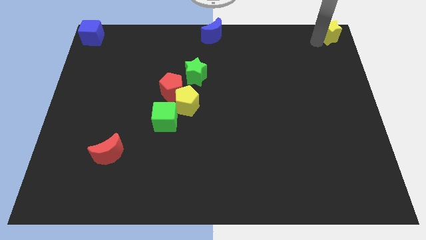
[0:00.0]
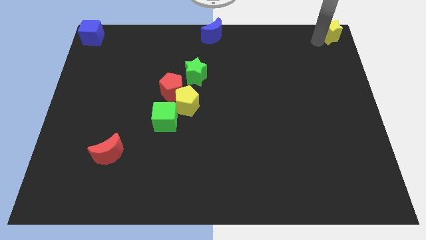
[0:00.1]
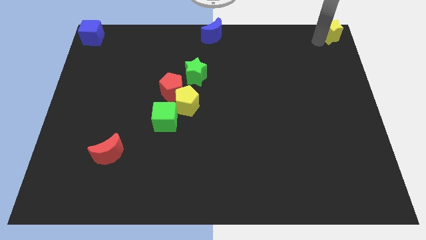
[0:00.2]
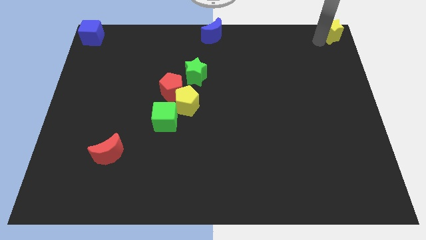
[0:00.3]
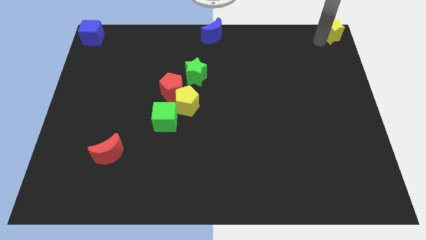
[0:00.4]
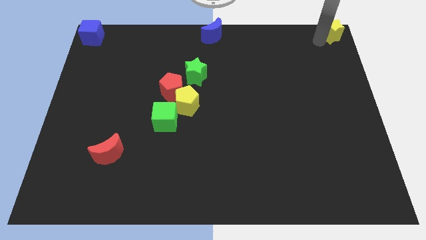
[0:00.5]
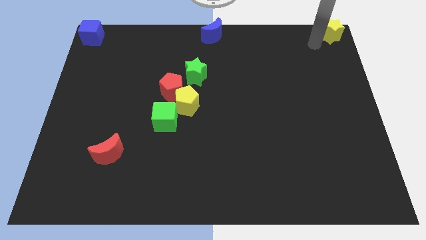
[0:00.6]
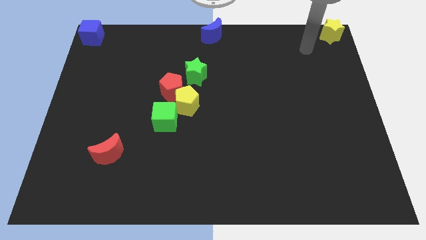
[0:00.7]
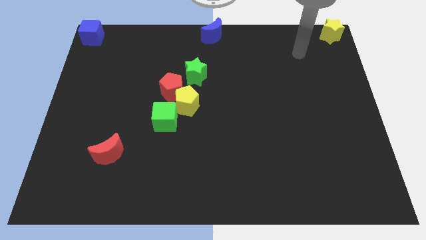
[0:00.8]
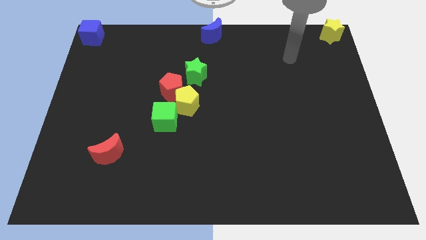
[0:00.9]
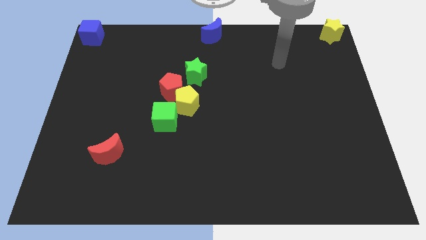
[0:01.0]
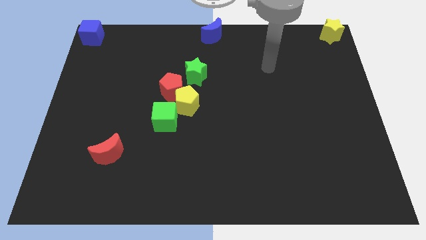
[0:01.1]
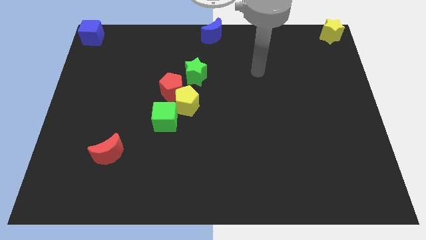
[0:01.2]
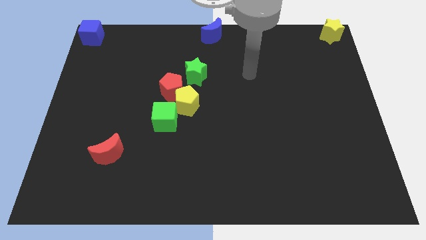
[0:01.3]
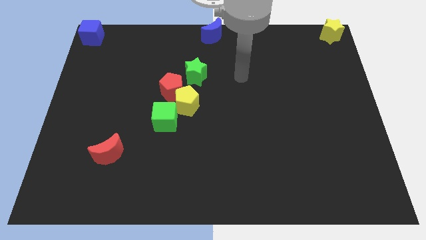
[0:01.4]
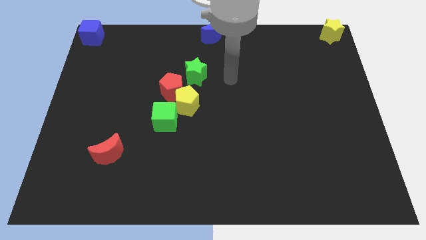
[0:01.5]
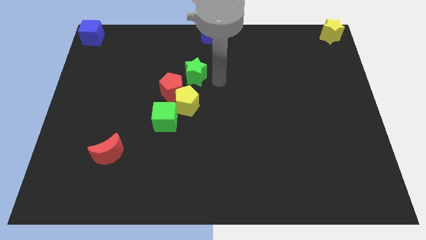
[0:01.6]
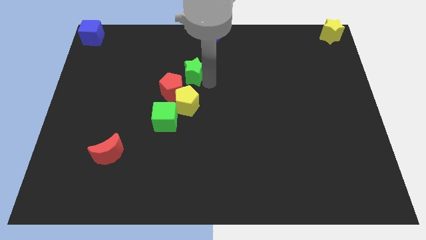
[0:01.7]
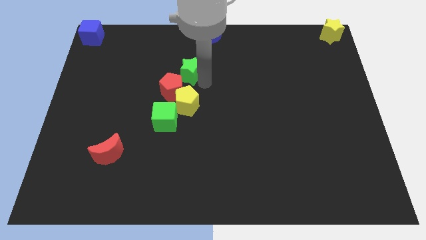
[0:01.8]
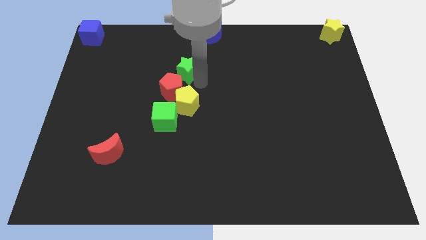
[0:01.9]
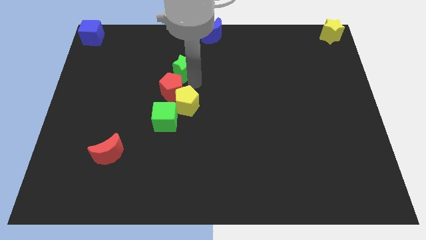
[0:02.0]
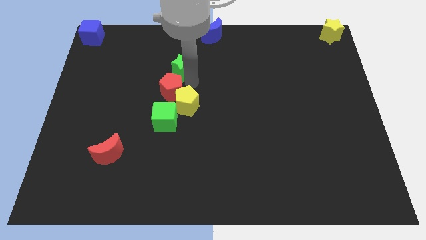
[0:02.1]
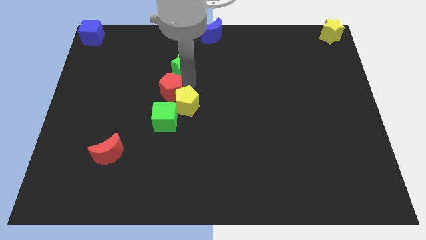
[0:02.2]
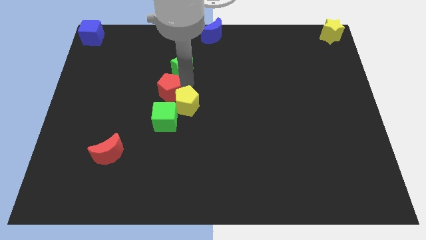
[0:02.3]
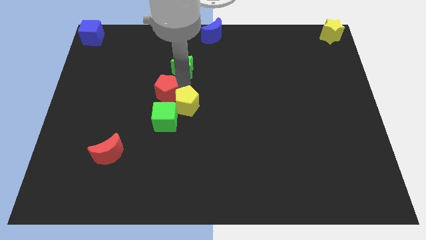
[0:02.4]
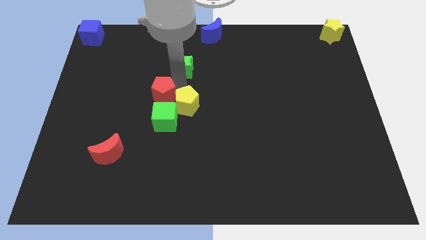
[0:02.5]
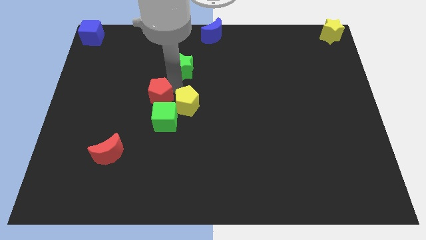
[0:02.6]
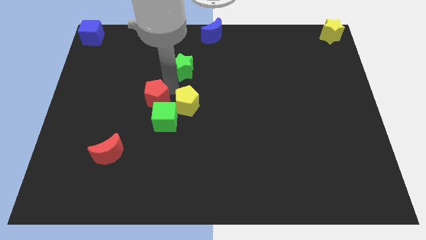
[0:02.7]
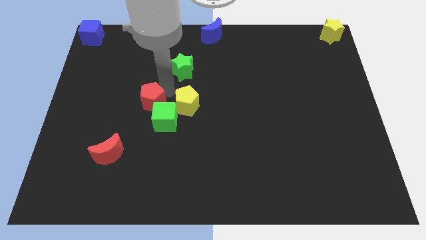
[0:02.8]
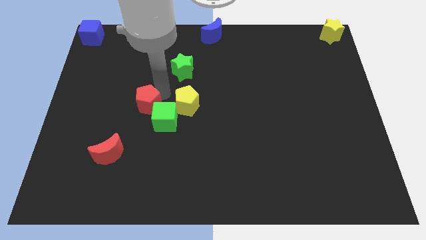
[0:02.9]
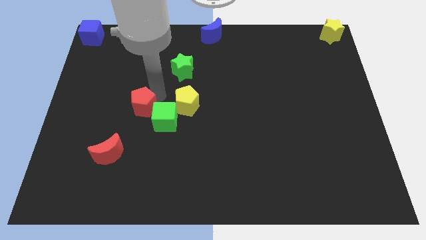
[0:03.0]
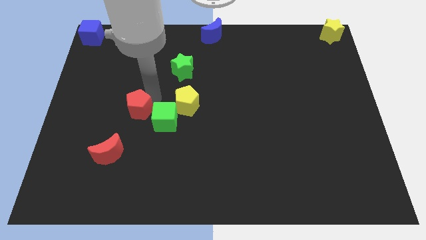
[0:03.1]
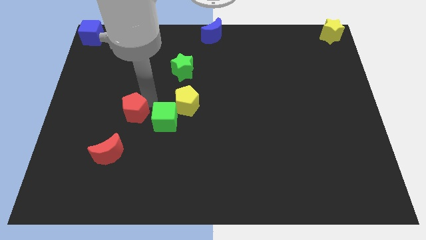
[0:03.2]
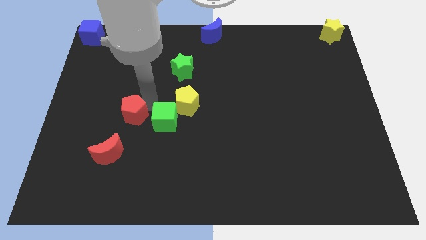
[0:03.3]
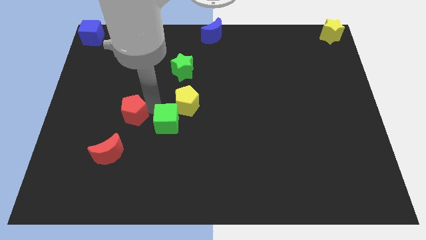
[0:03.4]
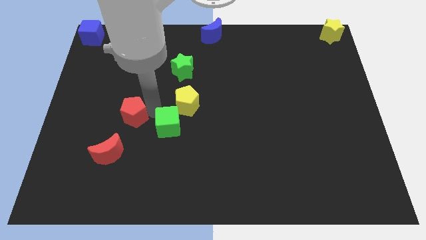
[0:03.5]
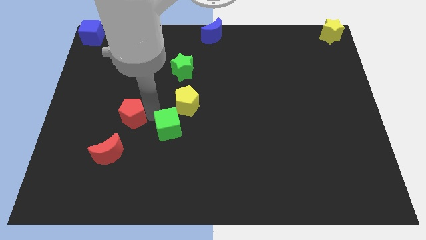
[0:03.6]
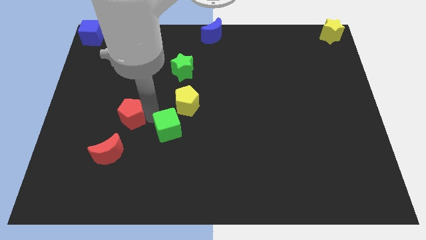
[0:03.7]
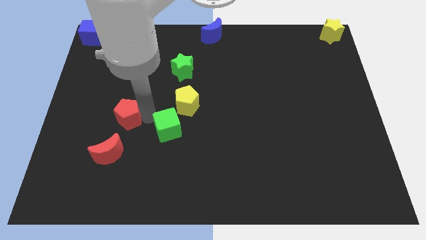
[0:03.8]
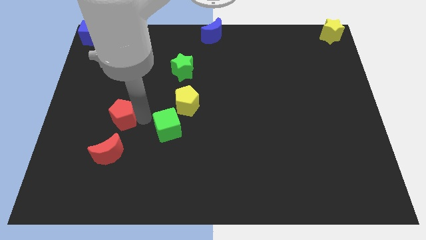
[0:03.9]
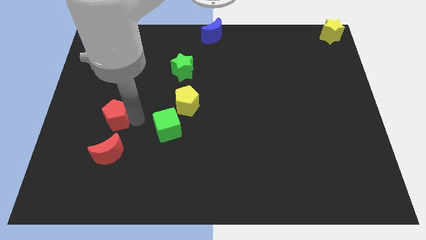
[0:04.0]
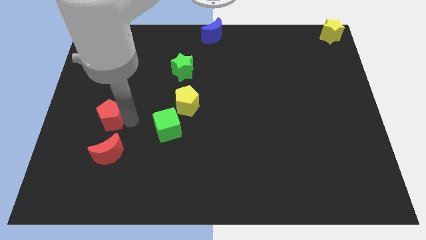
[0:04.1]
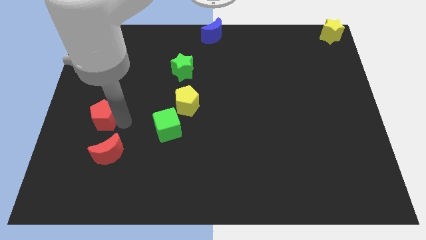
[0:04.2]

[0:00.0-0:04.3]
move the red pentagon towards the top side of the red crescent

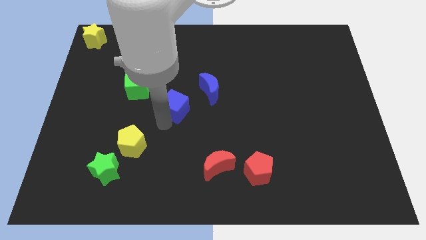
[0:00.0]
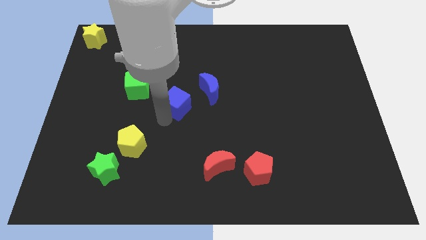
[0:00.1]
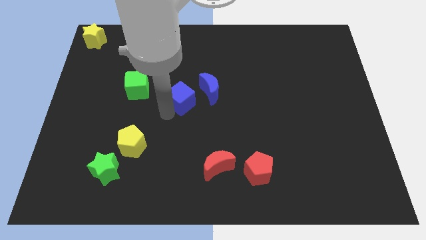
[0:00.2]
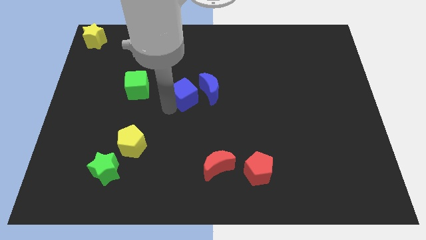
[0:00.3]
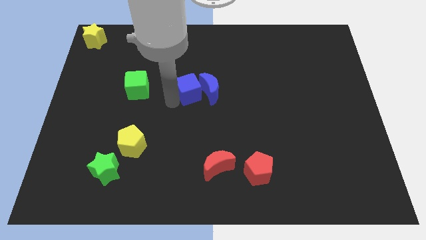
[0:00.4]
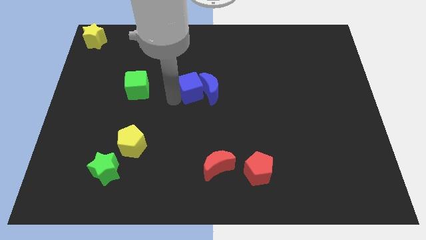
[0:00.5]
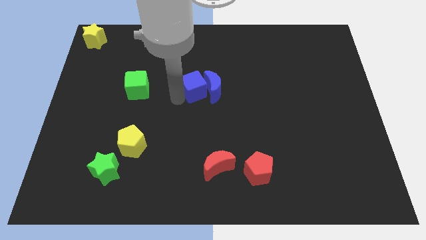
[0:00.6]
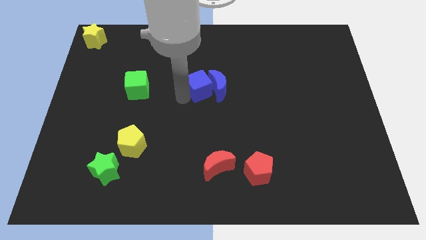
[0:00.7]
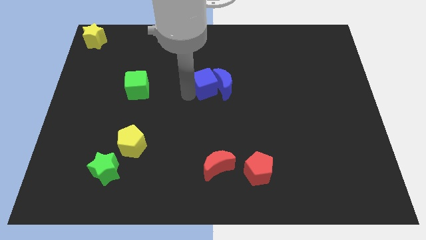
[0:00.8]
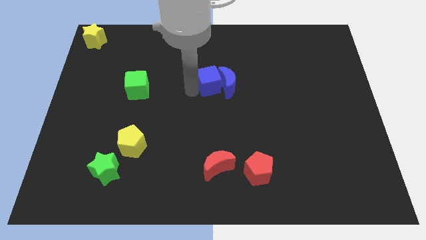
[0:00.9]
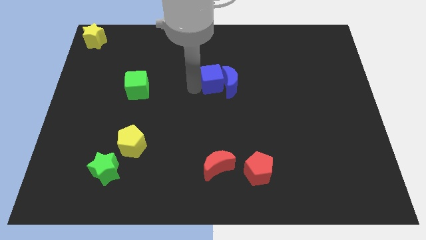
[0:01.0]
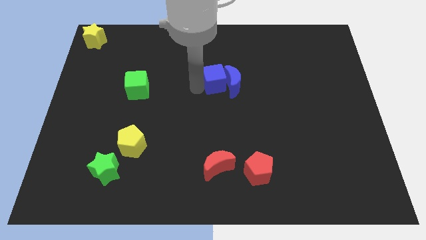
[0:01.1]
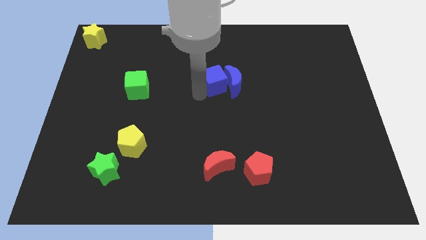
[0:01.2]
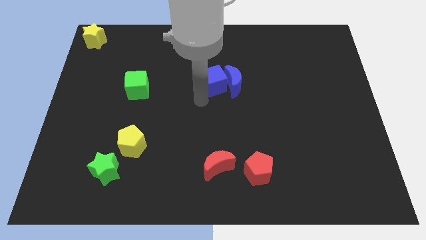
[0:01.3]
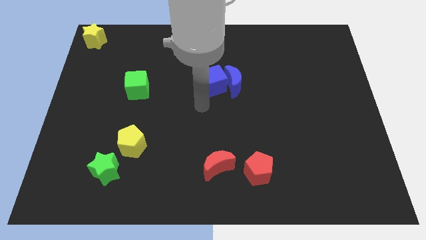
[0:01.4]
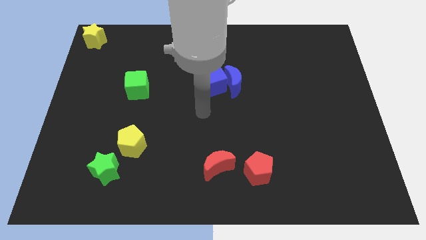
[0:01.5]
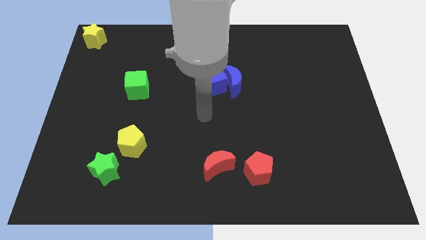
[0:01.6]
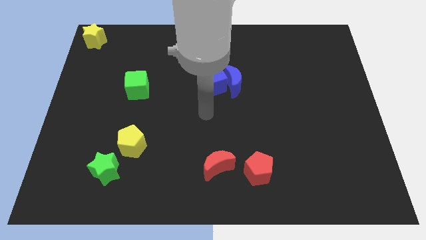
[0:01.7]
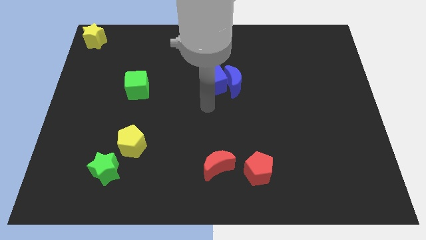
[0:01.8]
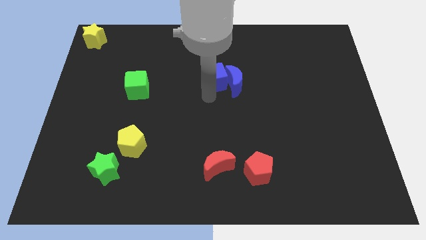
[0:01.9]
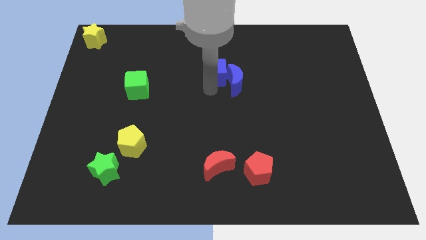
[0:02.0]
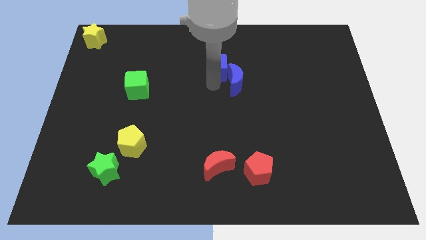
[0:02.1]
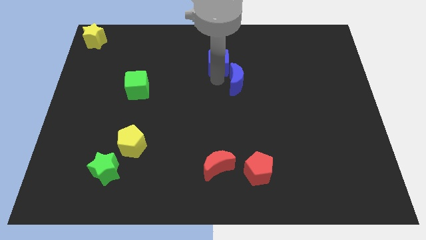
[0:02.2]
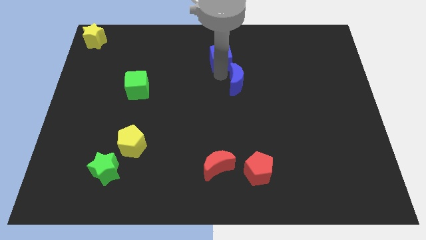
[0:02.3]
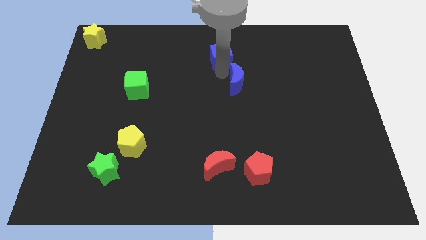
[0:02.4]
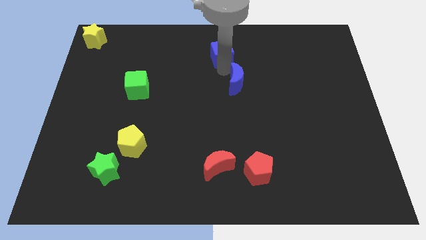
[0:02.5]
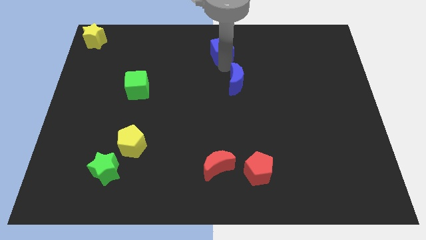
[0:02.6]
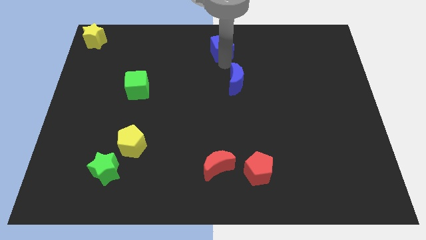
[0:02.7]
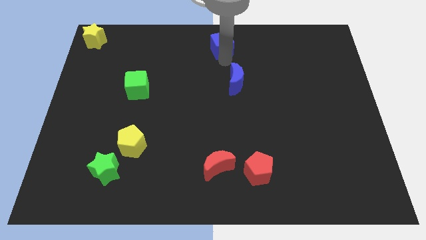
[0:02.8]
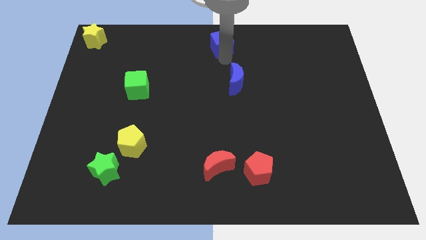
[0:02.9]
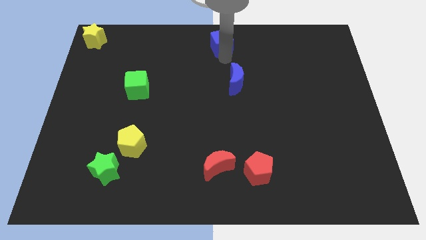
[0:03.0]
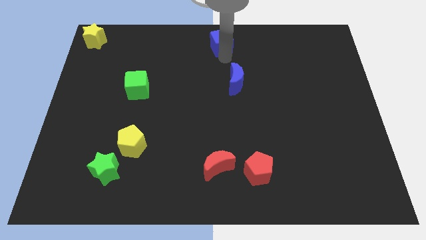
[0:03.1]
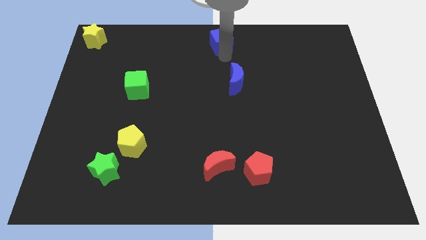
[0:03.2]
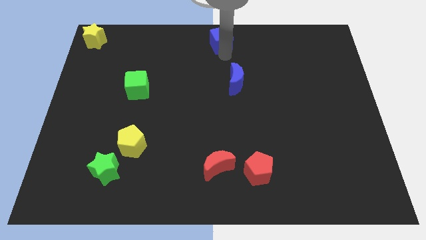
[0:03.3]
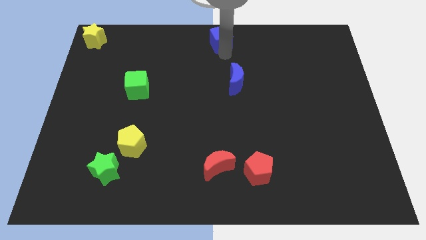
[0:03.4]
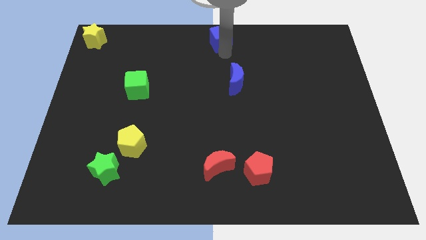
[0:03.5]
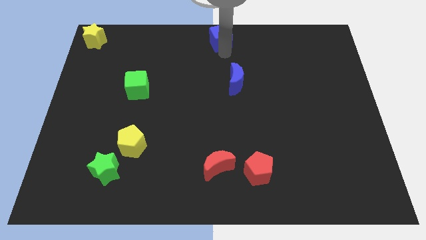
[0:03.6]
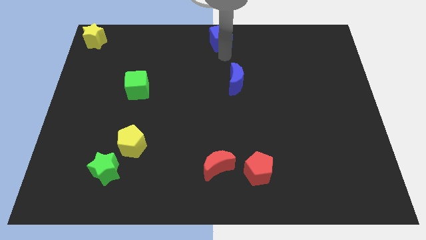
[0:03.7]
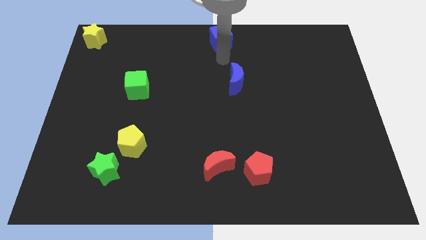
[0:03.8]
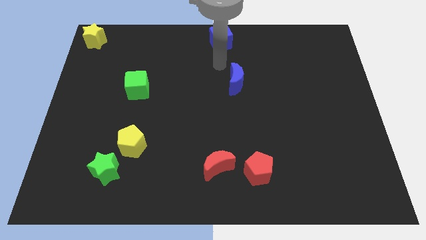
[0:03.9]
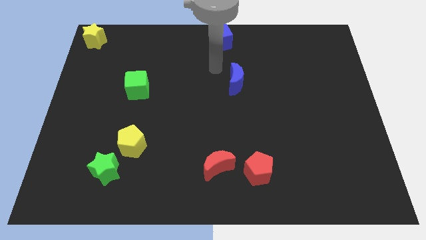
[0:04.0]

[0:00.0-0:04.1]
move the blue cube to the top center of the board

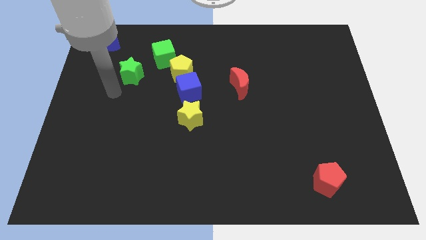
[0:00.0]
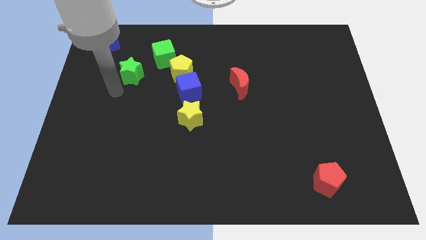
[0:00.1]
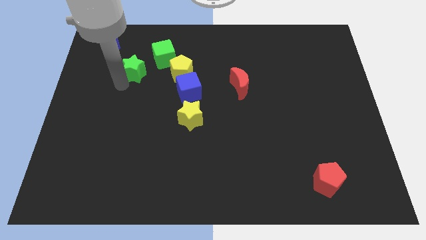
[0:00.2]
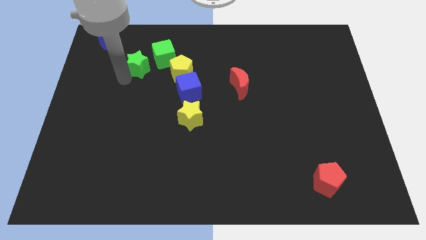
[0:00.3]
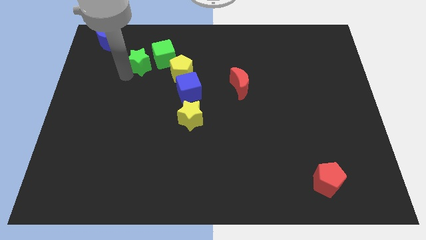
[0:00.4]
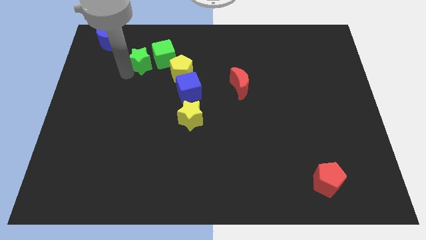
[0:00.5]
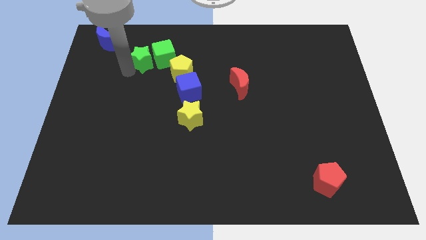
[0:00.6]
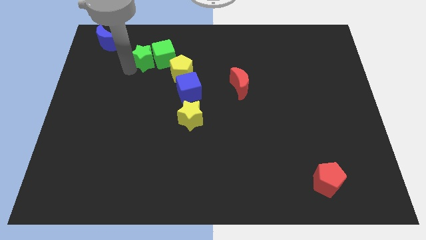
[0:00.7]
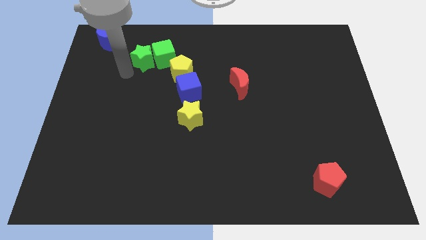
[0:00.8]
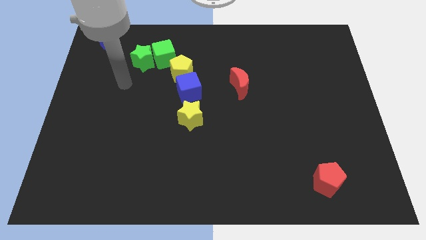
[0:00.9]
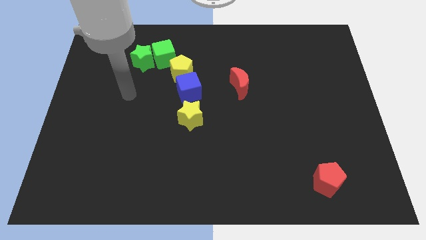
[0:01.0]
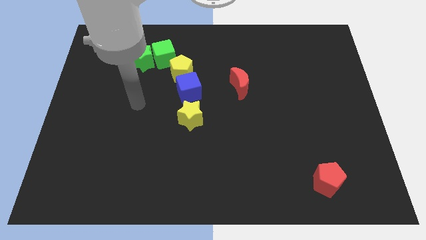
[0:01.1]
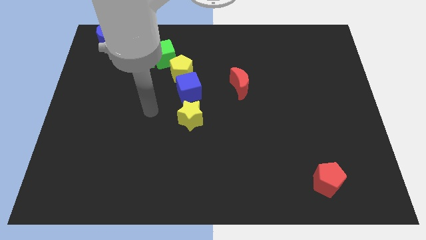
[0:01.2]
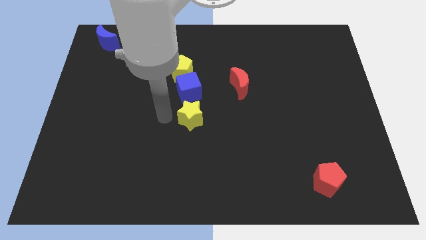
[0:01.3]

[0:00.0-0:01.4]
place the green star close to the green cube
